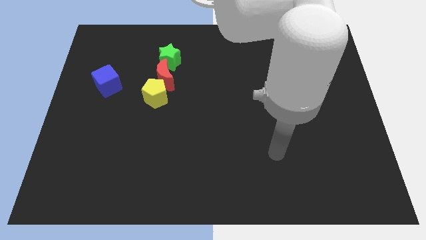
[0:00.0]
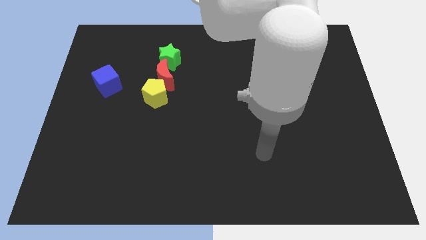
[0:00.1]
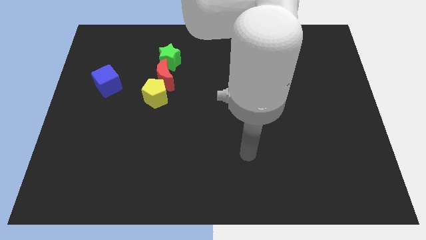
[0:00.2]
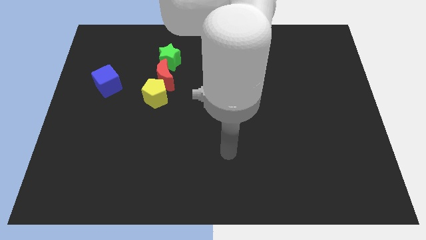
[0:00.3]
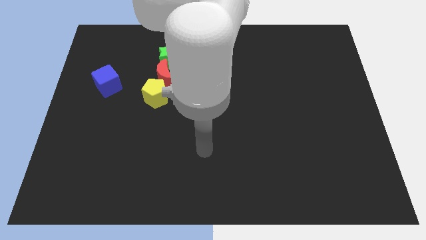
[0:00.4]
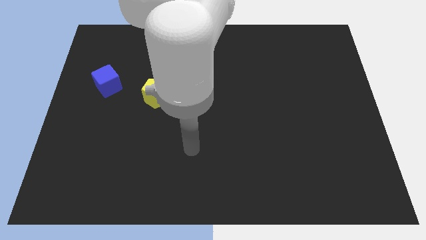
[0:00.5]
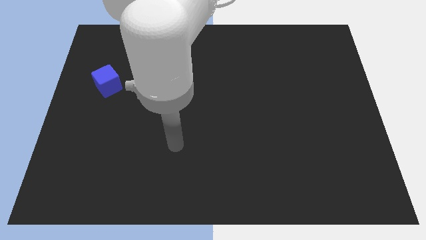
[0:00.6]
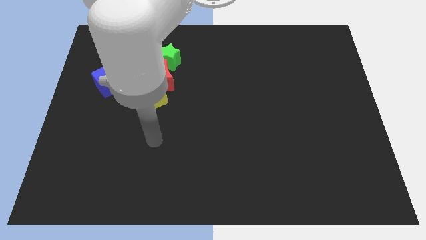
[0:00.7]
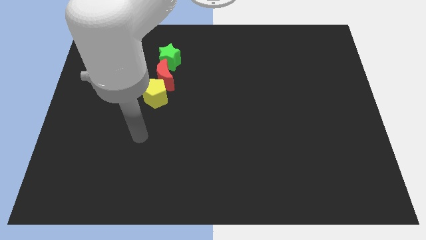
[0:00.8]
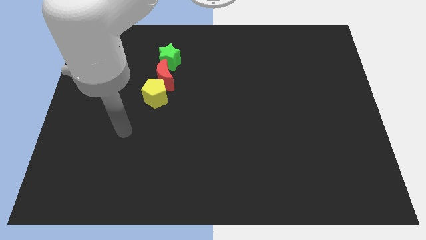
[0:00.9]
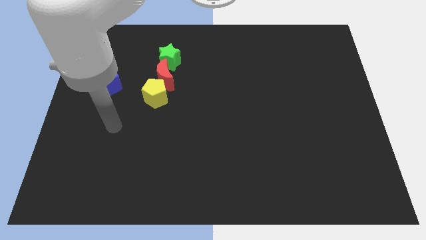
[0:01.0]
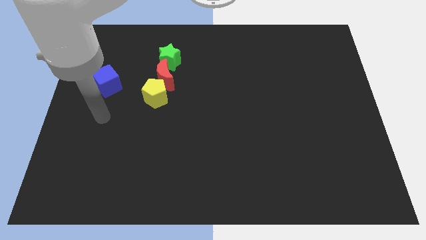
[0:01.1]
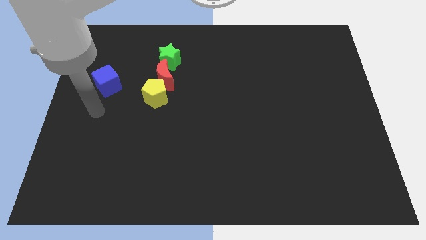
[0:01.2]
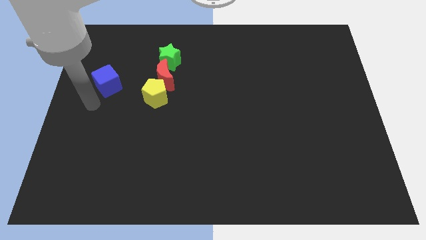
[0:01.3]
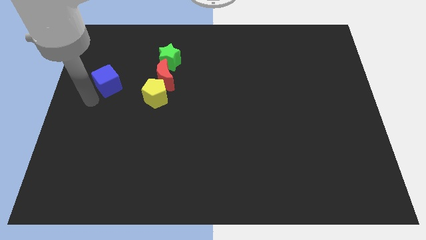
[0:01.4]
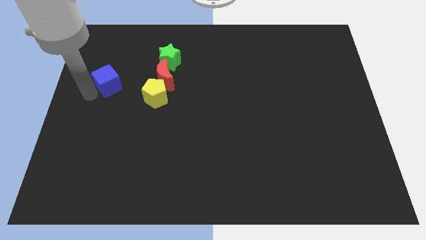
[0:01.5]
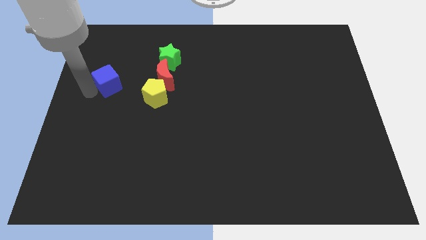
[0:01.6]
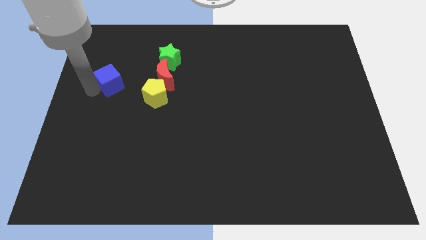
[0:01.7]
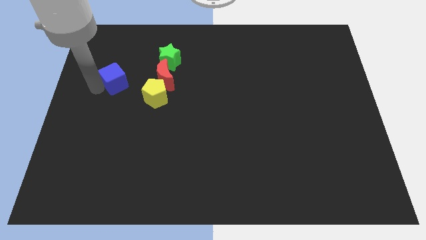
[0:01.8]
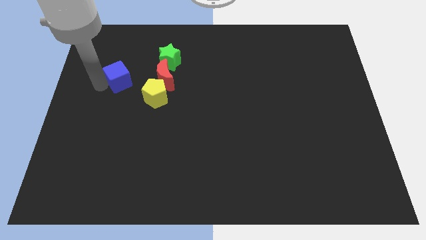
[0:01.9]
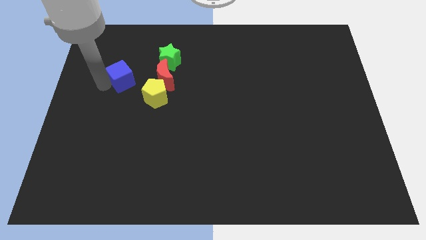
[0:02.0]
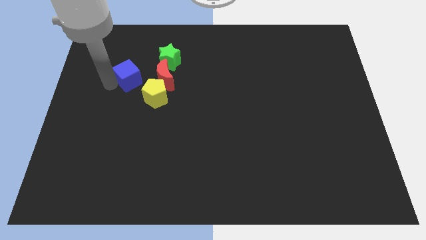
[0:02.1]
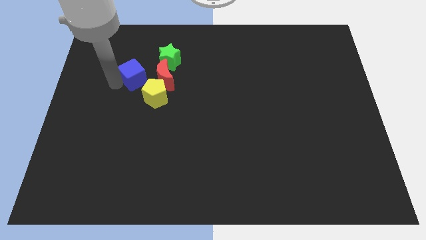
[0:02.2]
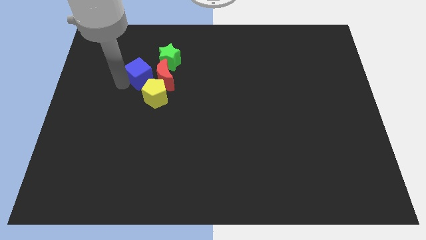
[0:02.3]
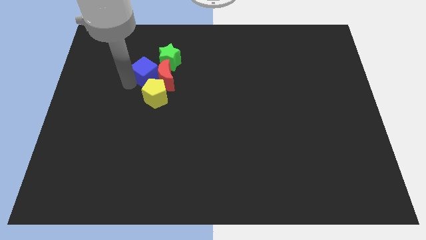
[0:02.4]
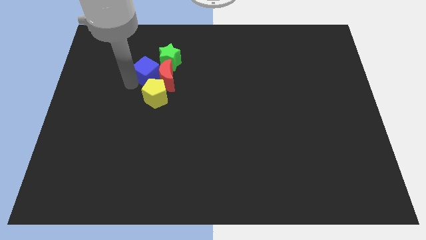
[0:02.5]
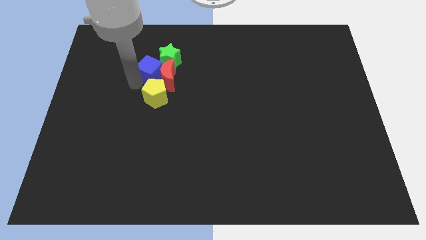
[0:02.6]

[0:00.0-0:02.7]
push the blue block close to the red moon

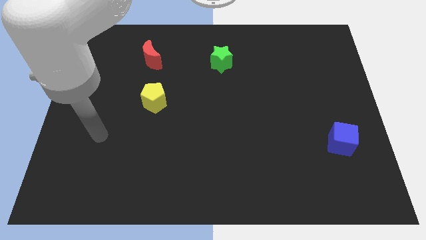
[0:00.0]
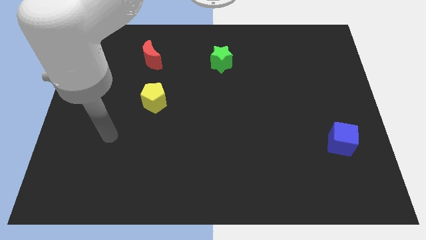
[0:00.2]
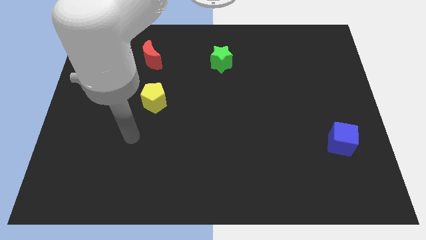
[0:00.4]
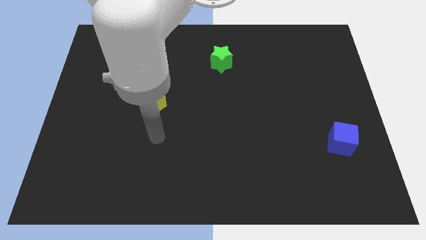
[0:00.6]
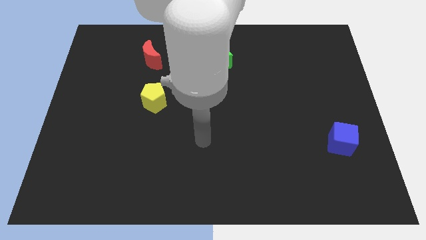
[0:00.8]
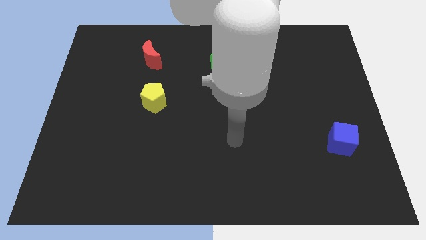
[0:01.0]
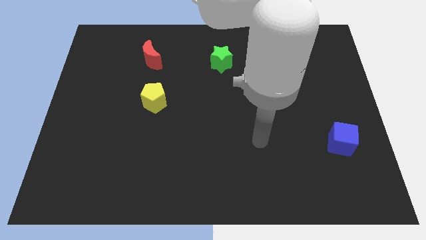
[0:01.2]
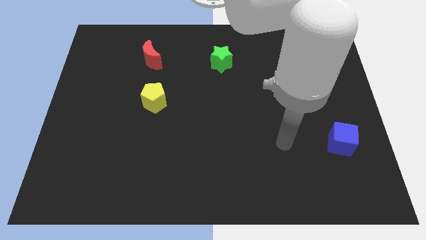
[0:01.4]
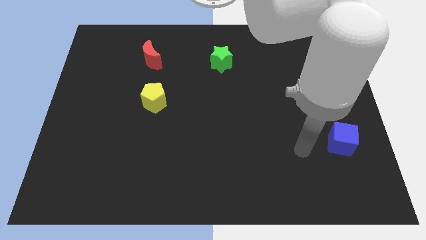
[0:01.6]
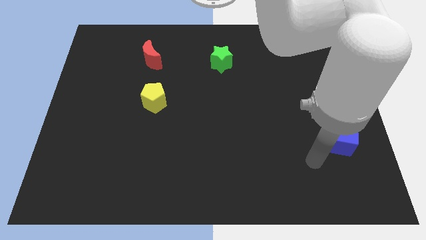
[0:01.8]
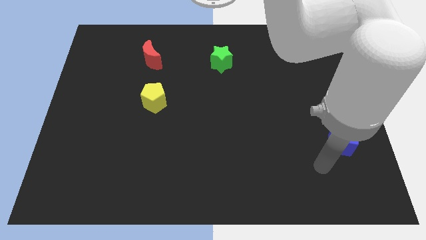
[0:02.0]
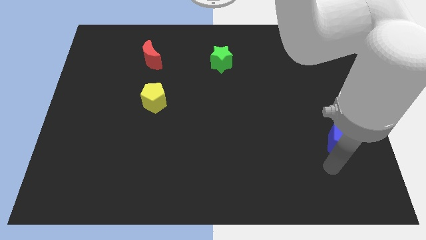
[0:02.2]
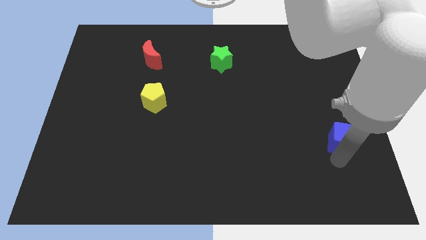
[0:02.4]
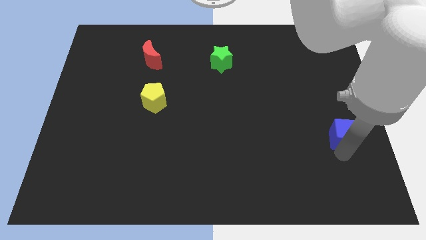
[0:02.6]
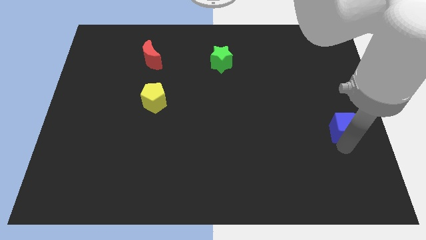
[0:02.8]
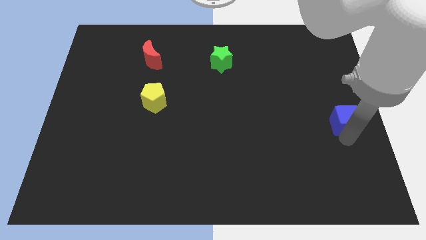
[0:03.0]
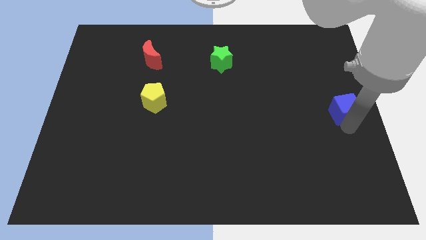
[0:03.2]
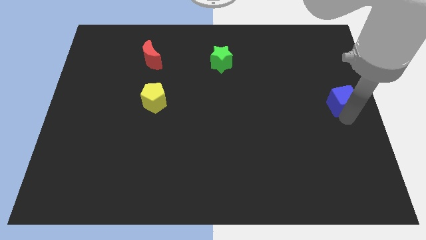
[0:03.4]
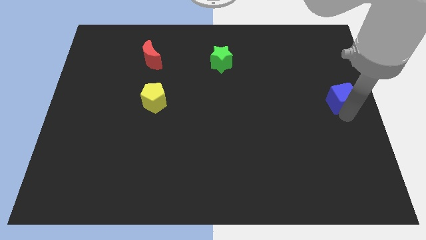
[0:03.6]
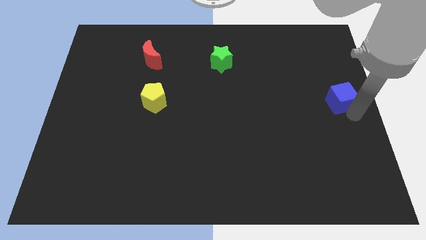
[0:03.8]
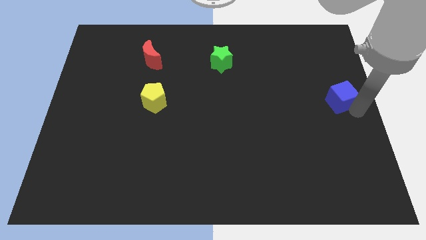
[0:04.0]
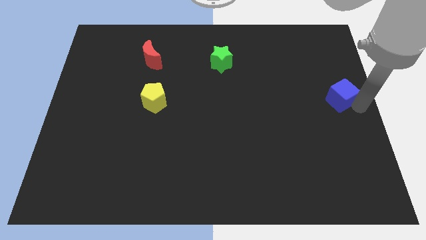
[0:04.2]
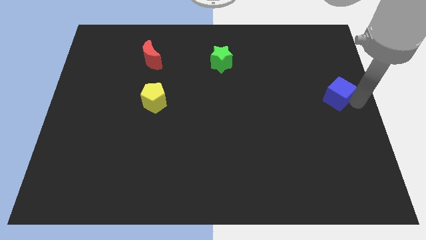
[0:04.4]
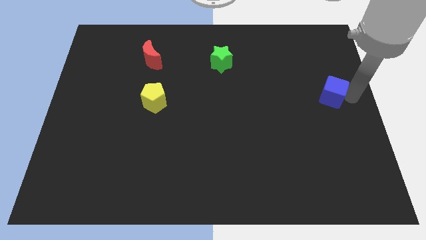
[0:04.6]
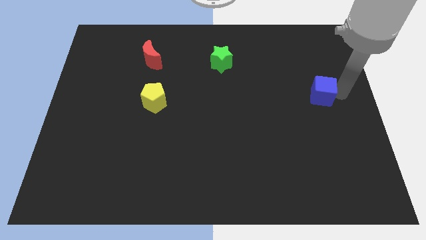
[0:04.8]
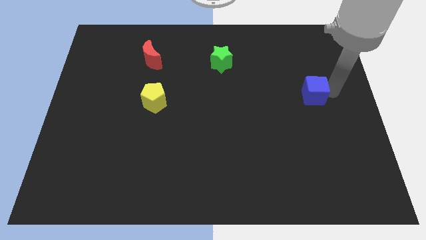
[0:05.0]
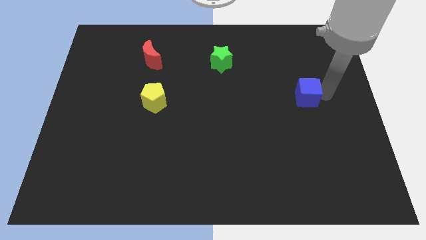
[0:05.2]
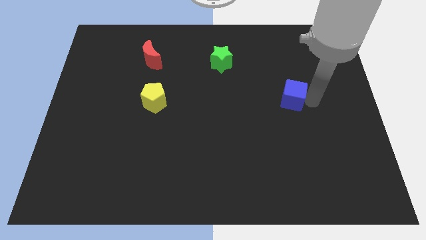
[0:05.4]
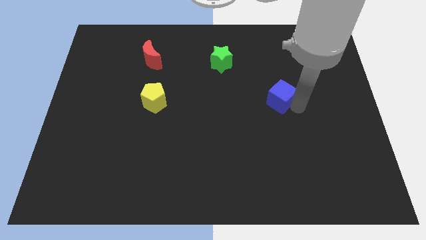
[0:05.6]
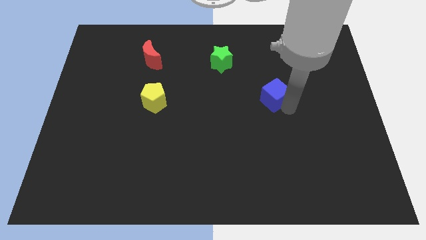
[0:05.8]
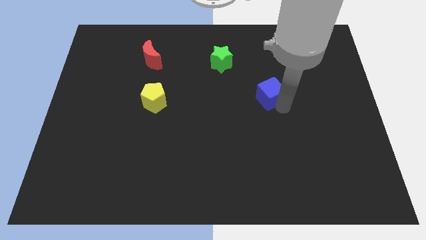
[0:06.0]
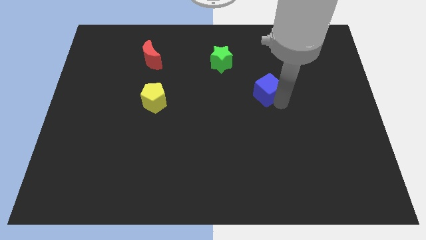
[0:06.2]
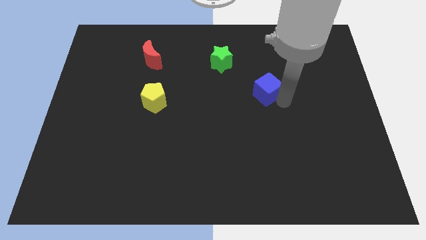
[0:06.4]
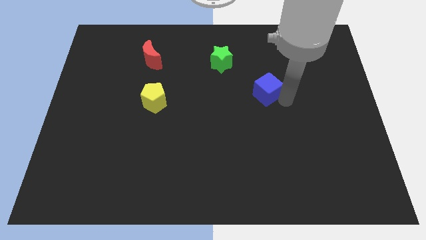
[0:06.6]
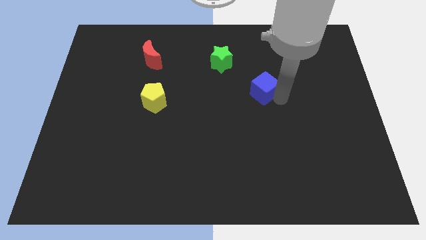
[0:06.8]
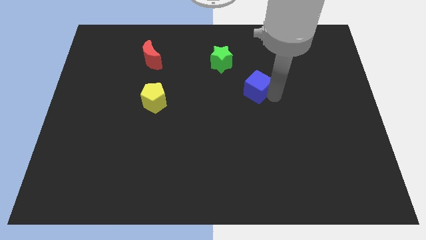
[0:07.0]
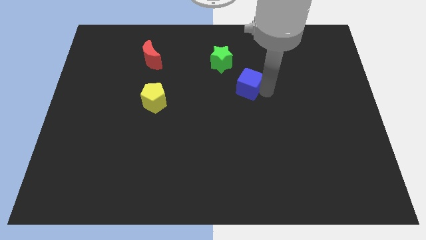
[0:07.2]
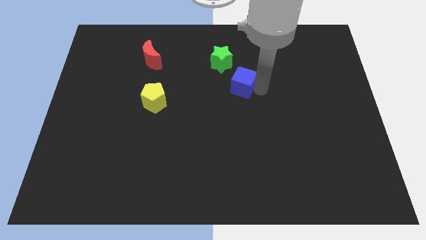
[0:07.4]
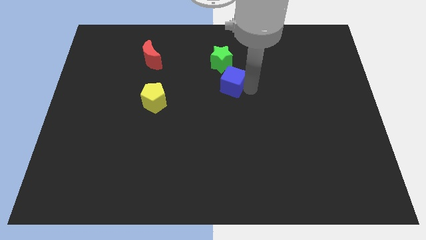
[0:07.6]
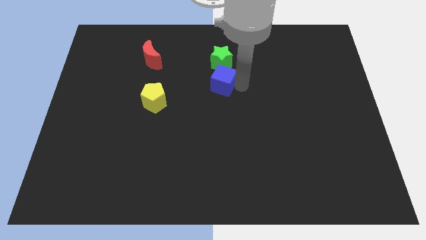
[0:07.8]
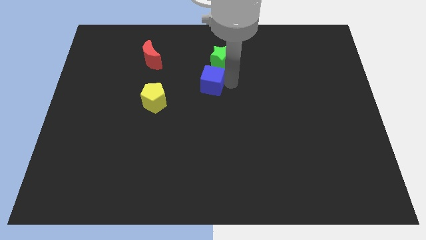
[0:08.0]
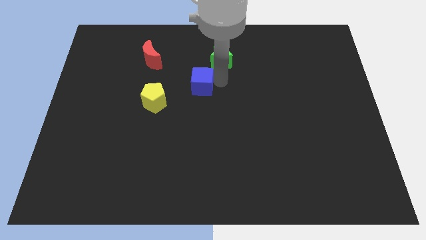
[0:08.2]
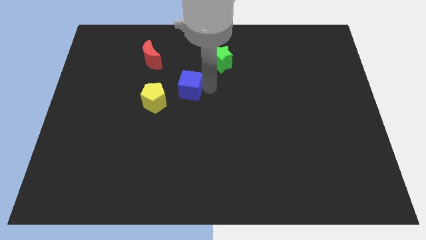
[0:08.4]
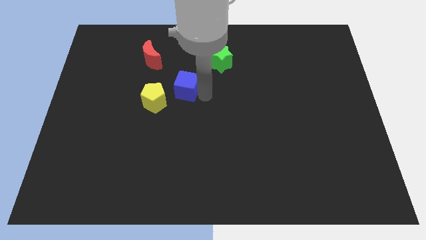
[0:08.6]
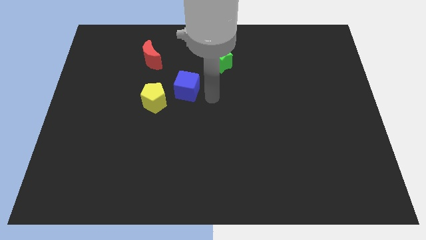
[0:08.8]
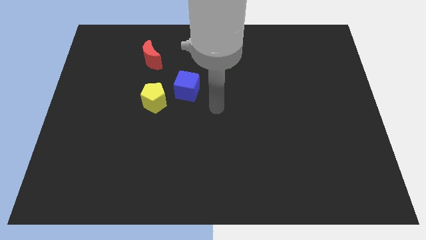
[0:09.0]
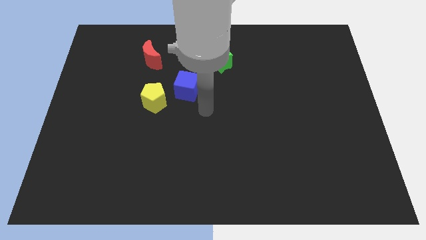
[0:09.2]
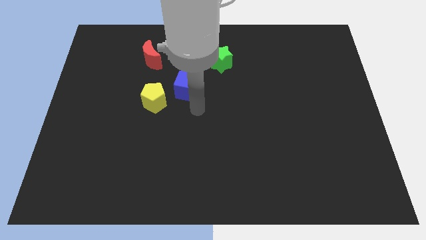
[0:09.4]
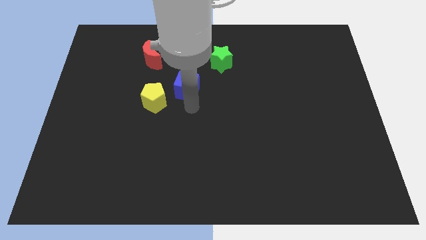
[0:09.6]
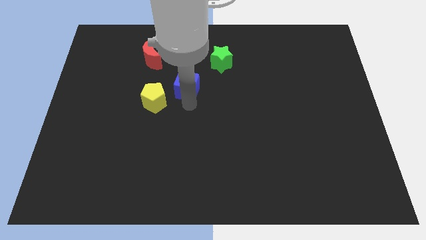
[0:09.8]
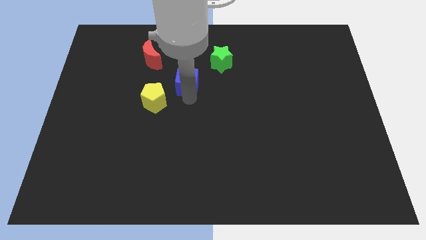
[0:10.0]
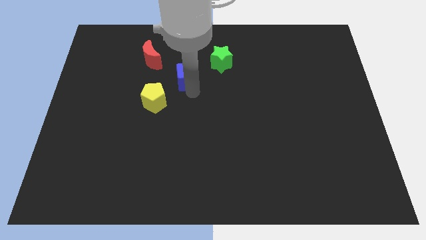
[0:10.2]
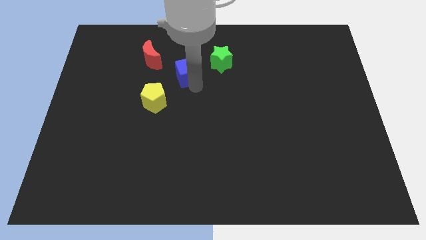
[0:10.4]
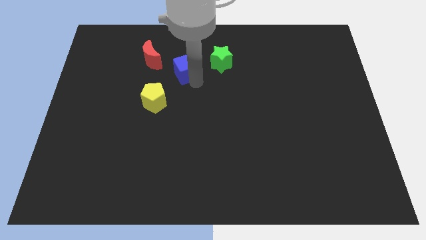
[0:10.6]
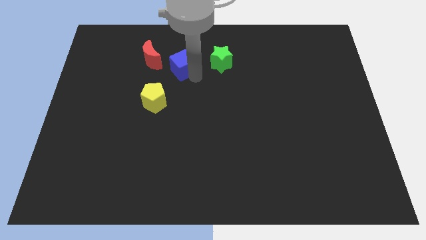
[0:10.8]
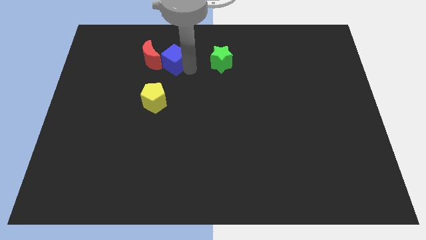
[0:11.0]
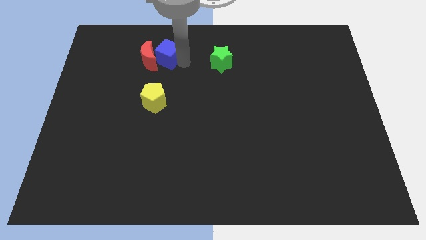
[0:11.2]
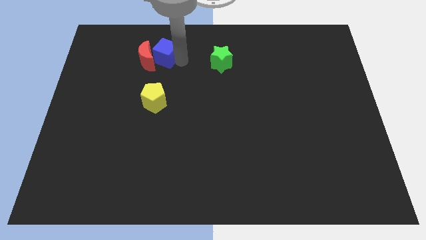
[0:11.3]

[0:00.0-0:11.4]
slide the cube towards the moon

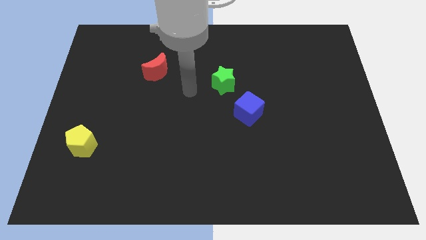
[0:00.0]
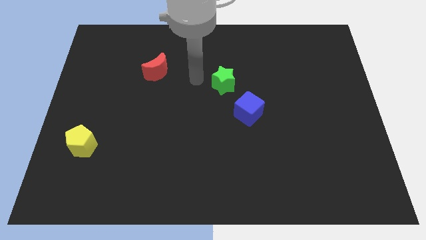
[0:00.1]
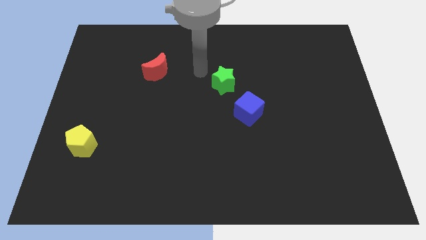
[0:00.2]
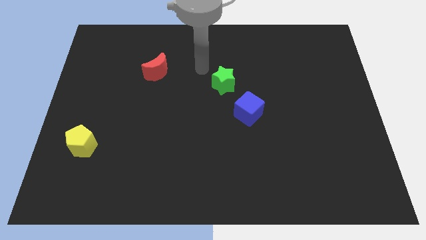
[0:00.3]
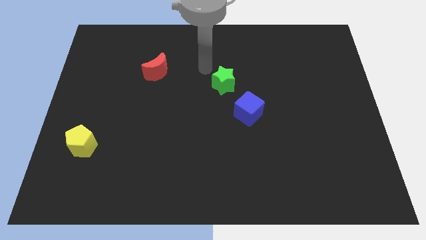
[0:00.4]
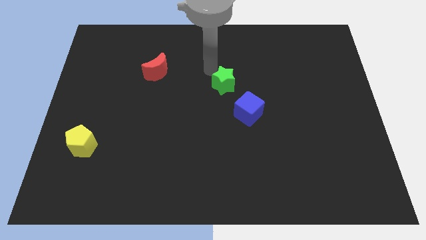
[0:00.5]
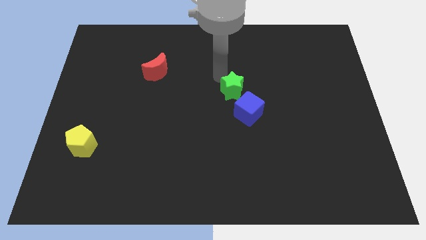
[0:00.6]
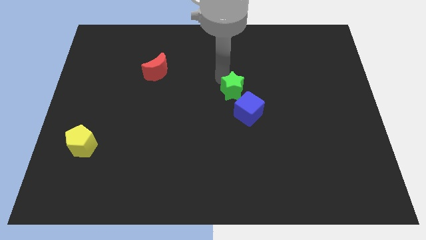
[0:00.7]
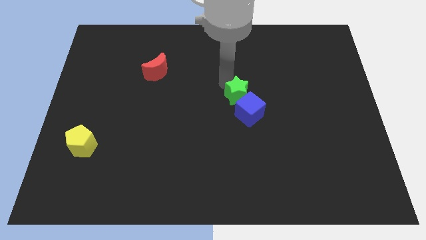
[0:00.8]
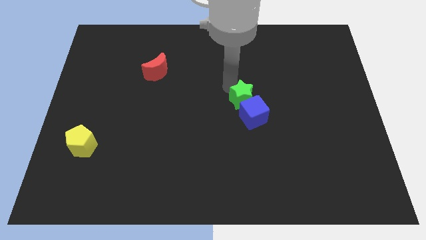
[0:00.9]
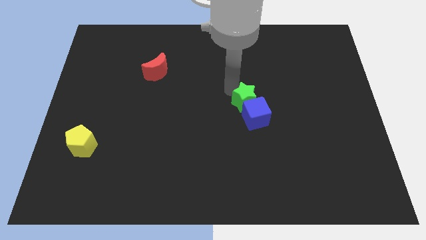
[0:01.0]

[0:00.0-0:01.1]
move the green star close to the cube
